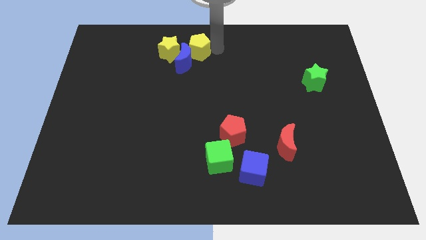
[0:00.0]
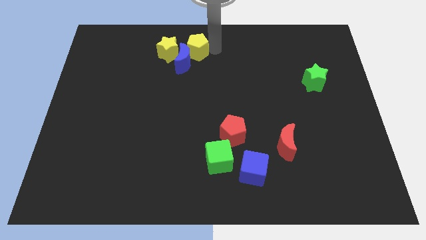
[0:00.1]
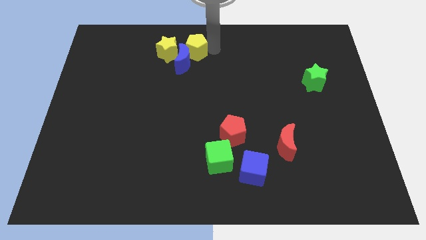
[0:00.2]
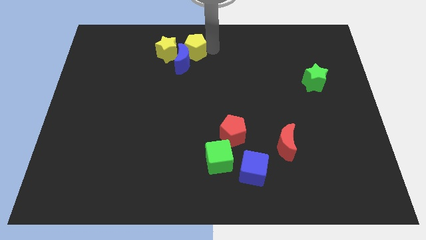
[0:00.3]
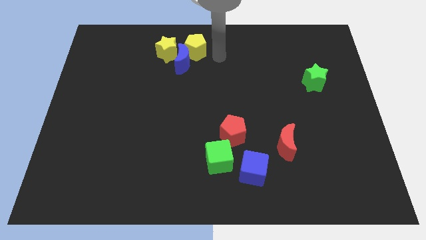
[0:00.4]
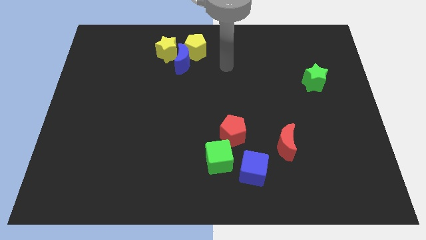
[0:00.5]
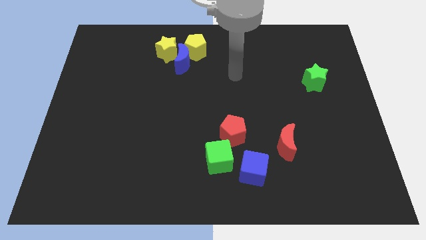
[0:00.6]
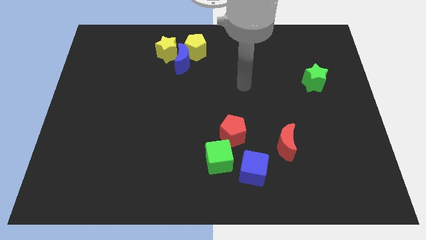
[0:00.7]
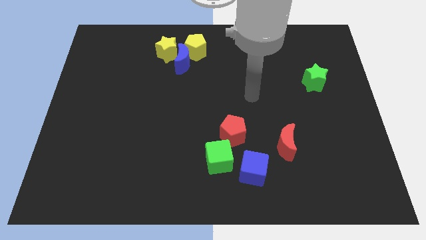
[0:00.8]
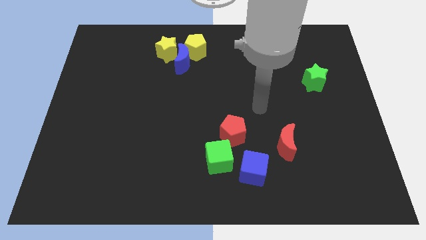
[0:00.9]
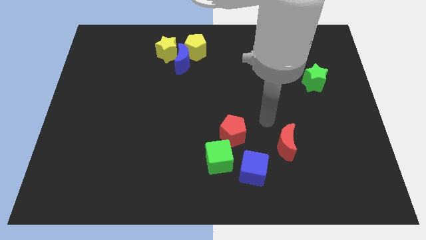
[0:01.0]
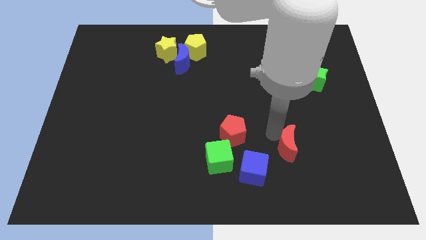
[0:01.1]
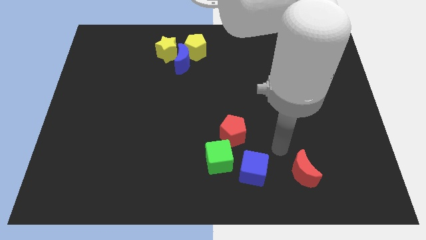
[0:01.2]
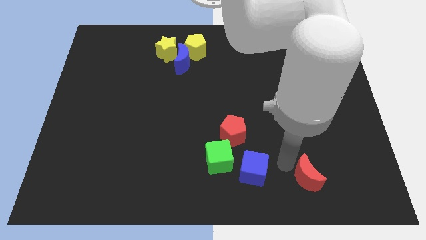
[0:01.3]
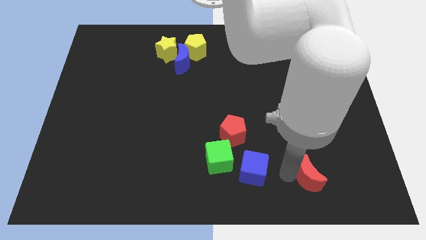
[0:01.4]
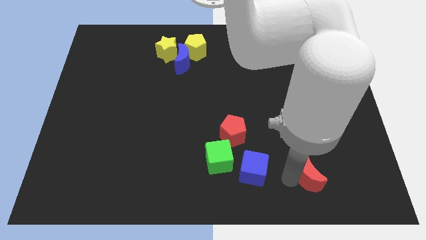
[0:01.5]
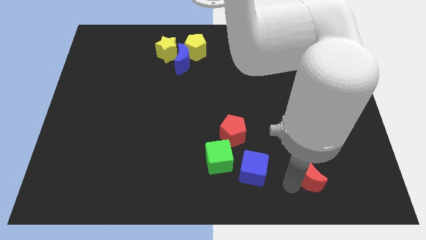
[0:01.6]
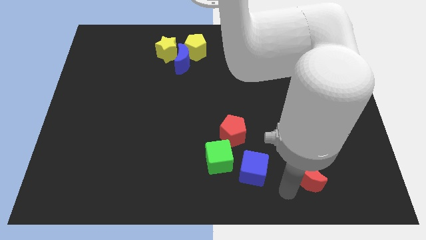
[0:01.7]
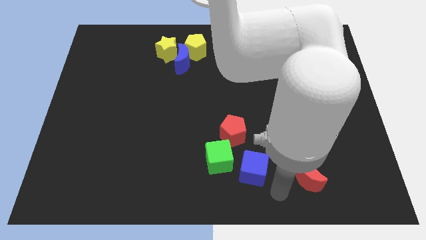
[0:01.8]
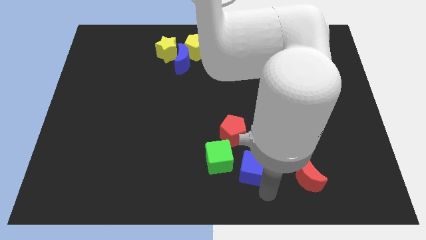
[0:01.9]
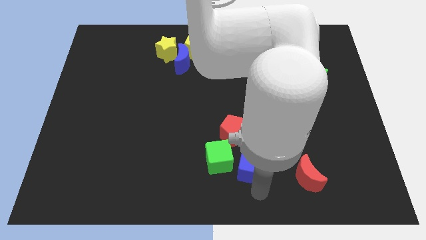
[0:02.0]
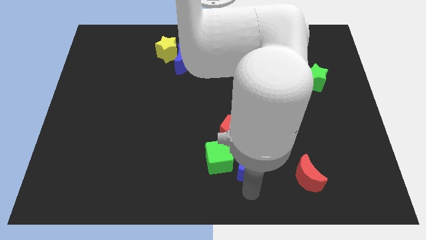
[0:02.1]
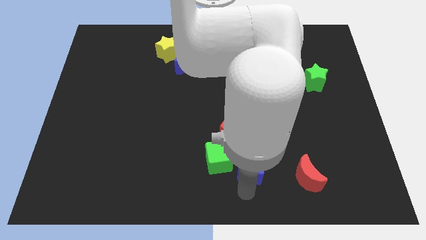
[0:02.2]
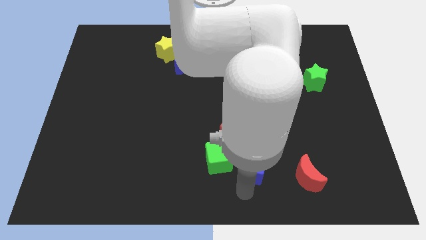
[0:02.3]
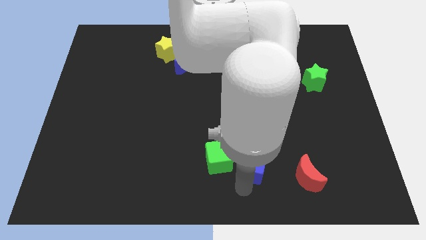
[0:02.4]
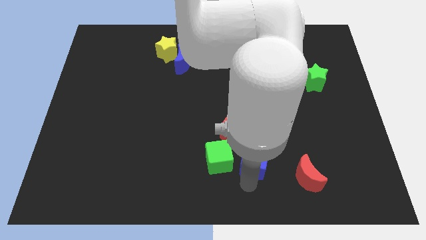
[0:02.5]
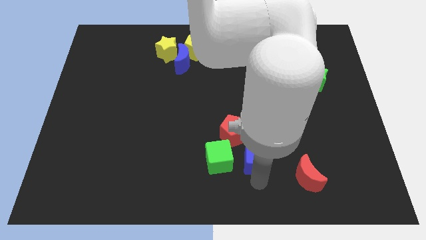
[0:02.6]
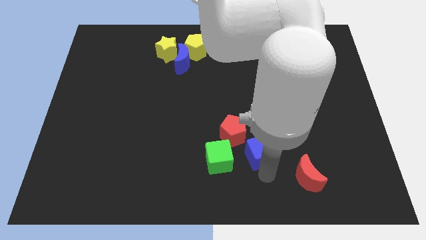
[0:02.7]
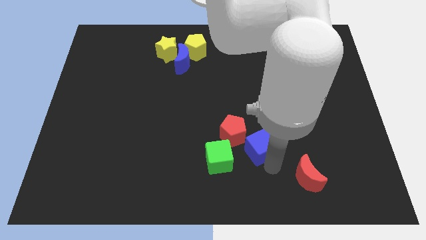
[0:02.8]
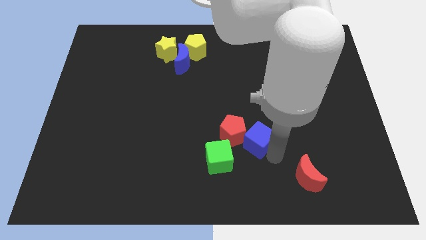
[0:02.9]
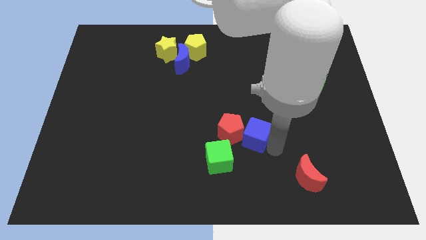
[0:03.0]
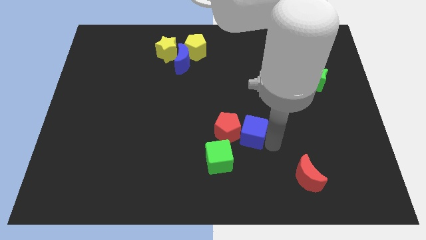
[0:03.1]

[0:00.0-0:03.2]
push the blue cube into the red pentagon

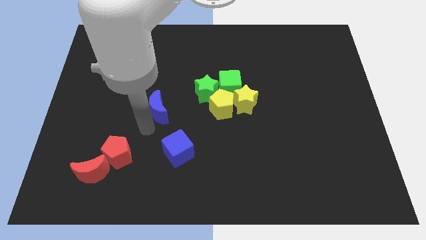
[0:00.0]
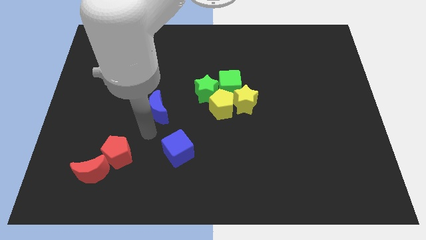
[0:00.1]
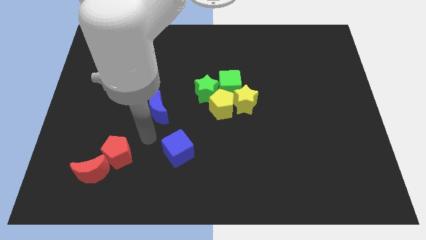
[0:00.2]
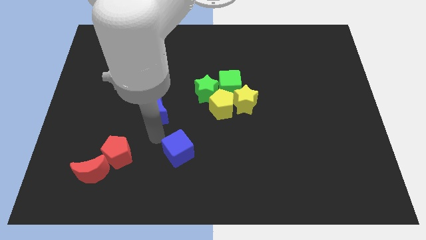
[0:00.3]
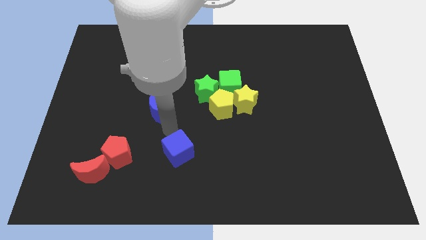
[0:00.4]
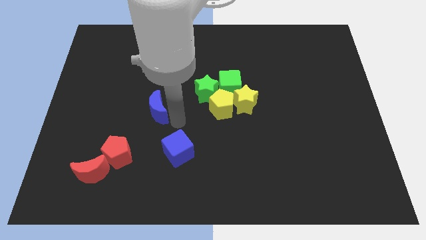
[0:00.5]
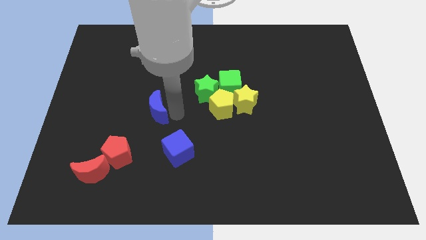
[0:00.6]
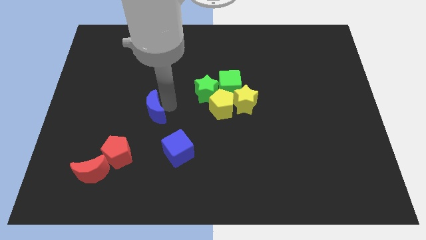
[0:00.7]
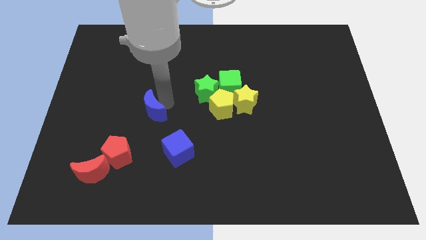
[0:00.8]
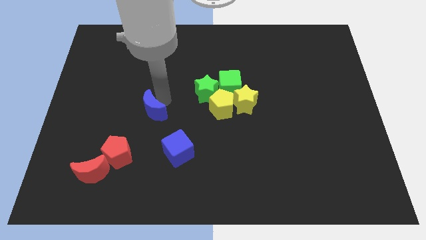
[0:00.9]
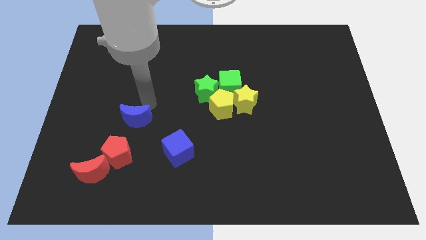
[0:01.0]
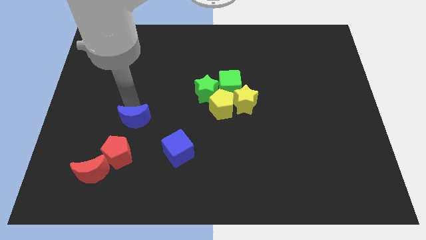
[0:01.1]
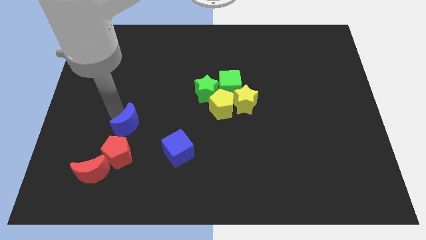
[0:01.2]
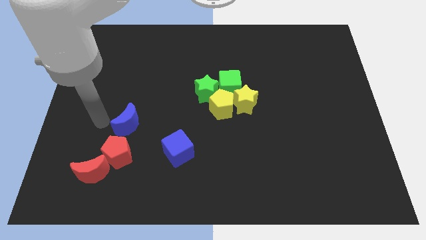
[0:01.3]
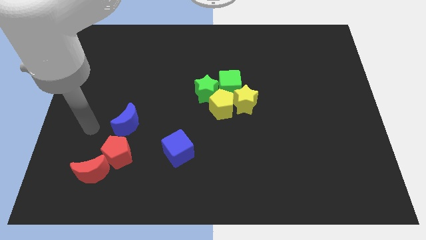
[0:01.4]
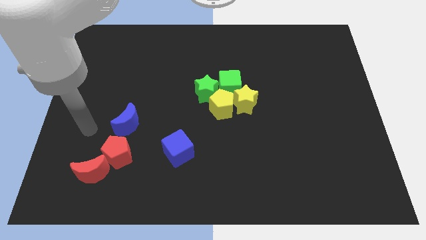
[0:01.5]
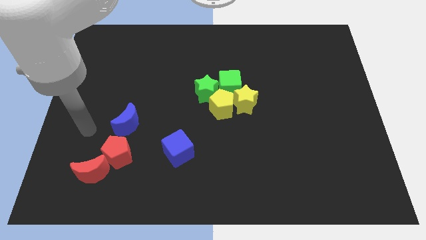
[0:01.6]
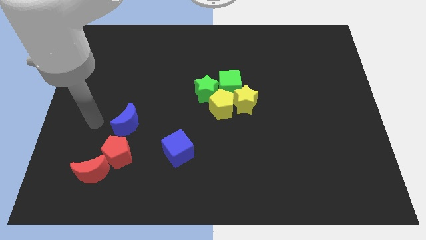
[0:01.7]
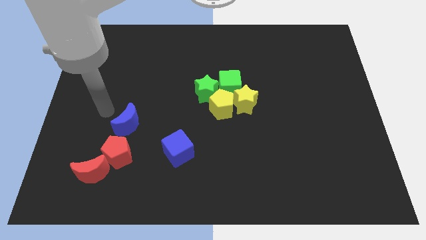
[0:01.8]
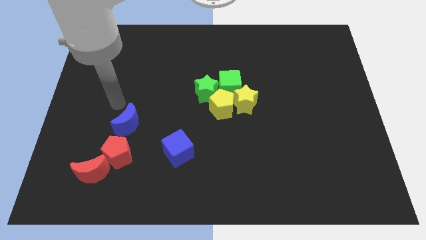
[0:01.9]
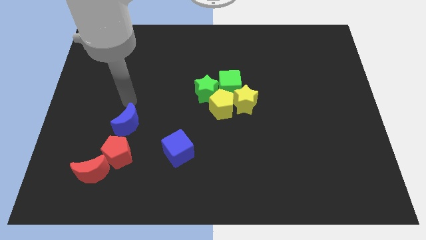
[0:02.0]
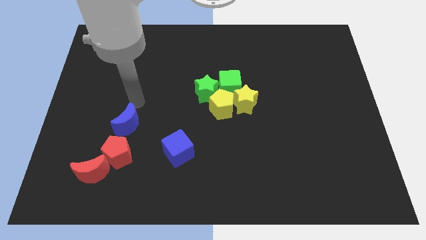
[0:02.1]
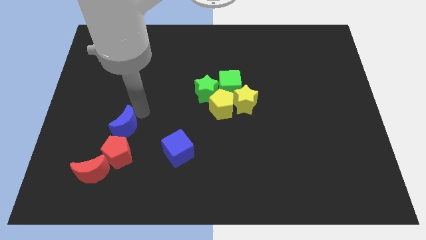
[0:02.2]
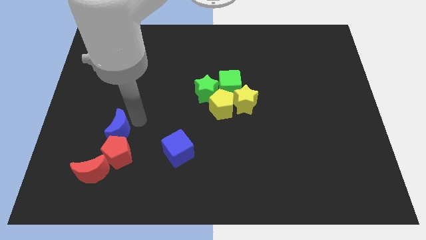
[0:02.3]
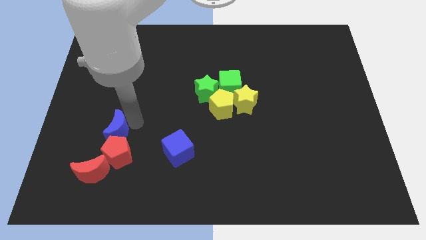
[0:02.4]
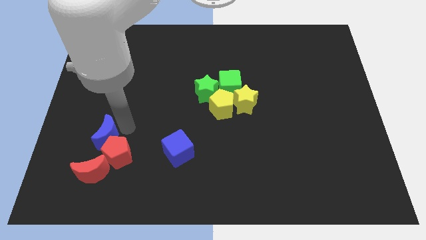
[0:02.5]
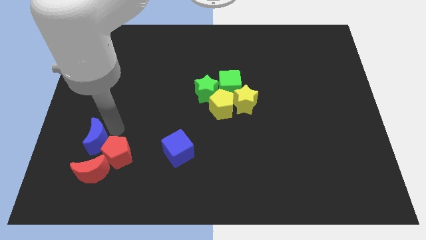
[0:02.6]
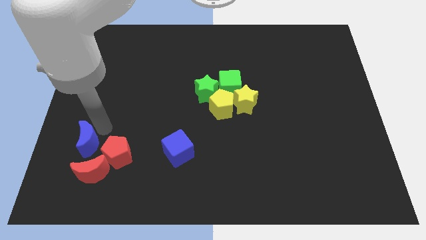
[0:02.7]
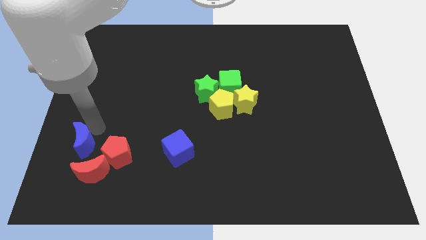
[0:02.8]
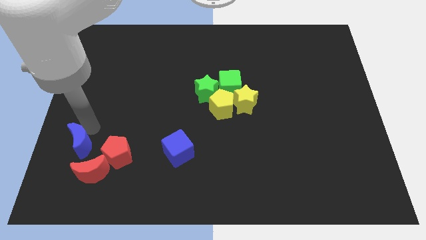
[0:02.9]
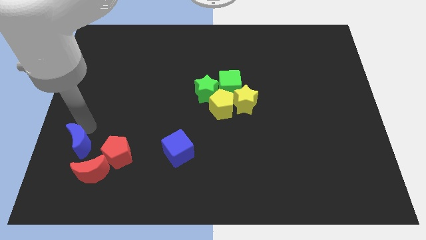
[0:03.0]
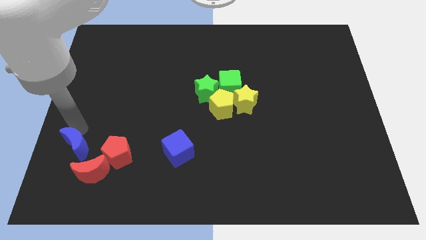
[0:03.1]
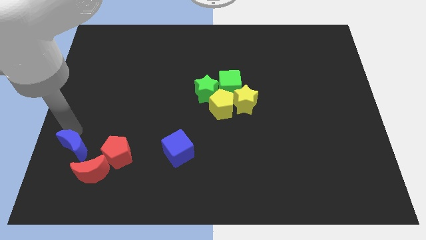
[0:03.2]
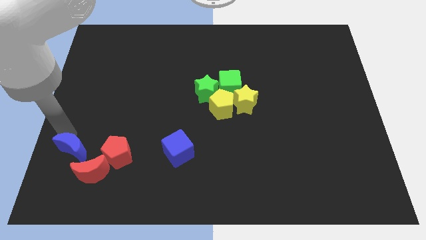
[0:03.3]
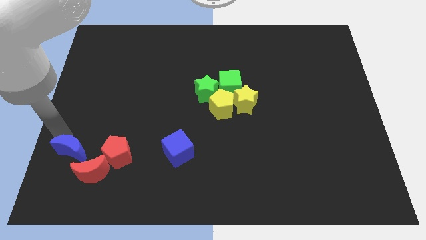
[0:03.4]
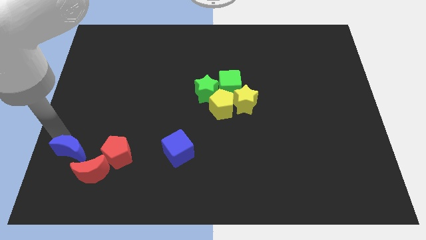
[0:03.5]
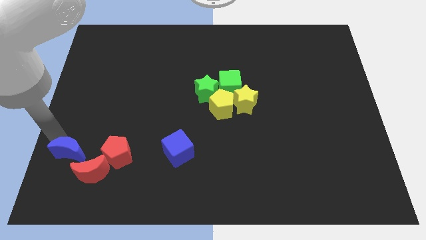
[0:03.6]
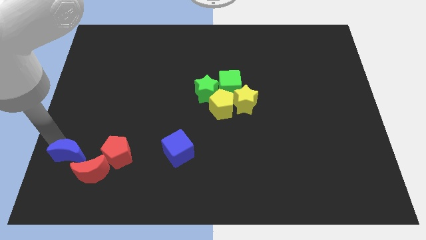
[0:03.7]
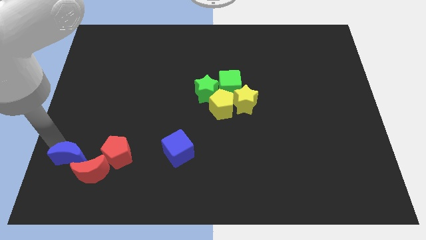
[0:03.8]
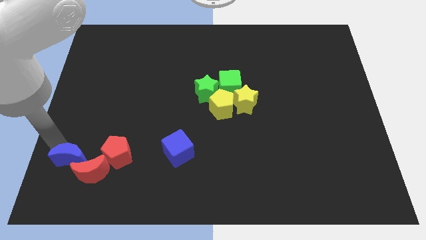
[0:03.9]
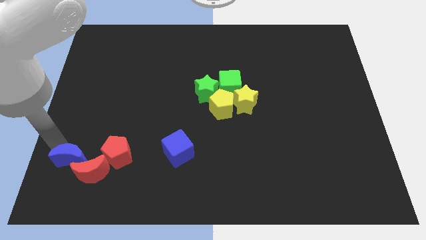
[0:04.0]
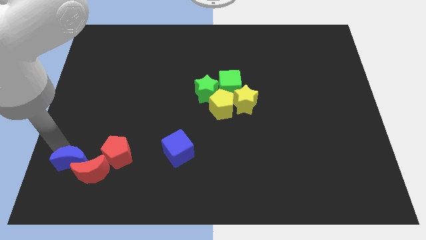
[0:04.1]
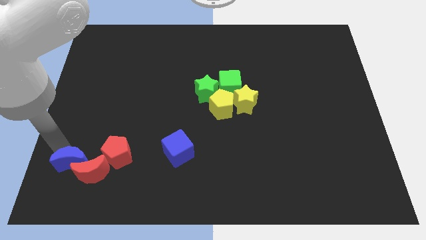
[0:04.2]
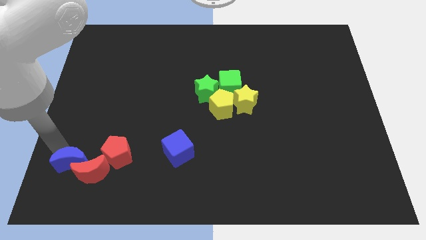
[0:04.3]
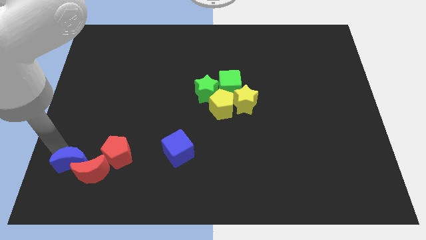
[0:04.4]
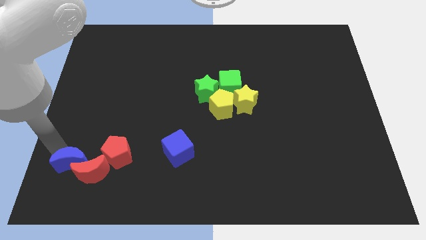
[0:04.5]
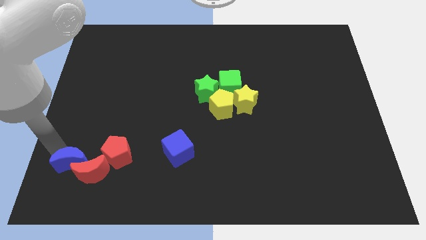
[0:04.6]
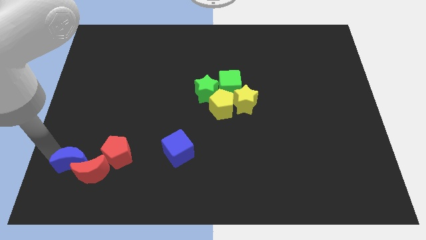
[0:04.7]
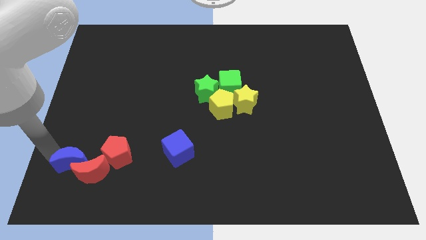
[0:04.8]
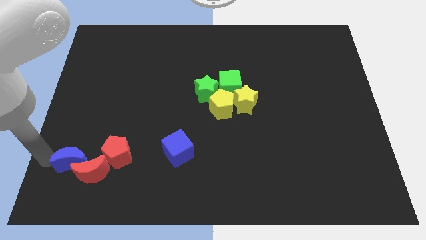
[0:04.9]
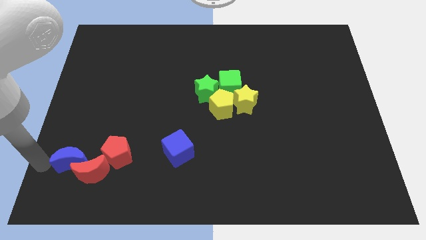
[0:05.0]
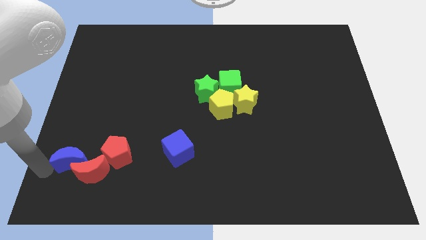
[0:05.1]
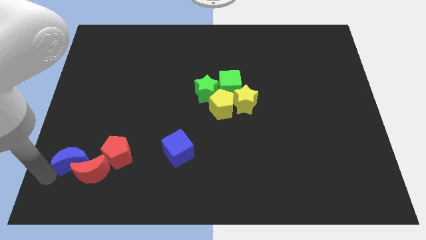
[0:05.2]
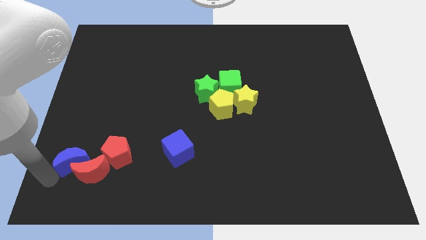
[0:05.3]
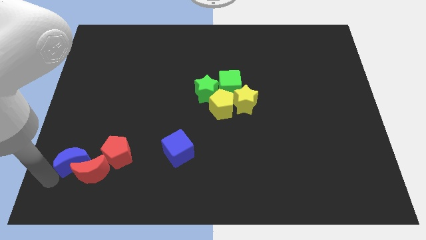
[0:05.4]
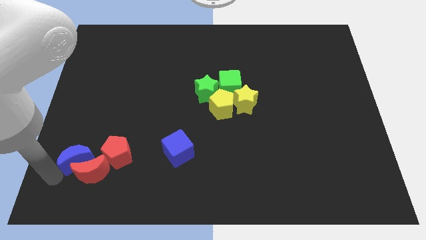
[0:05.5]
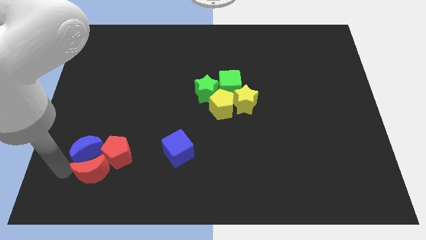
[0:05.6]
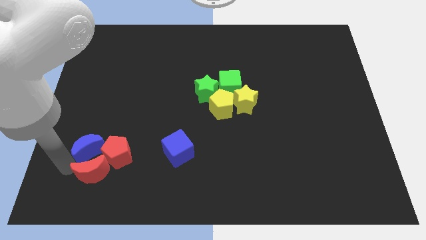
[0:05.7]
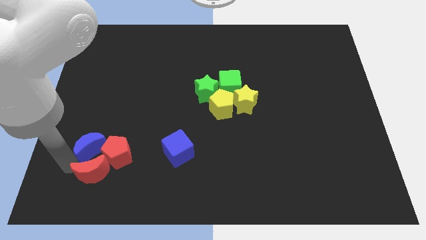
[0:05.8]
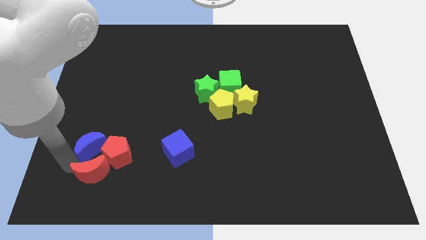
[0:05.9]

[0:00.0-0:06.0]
push the blue crescent close to the red pentagon
